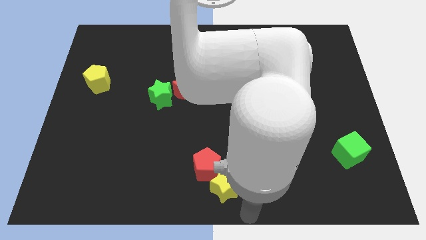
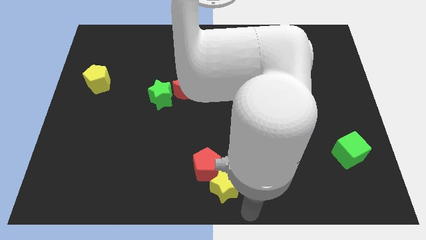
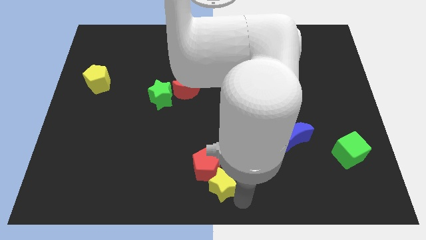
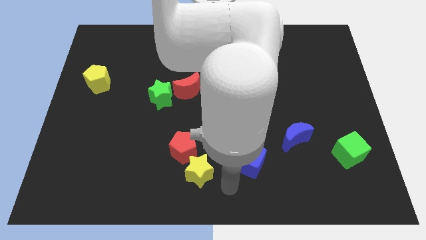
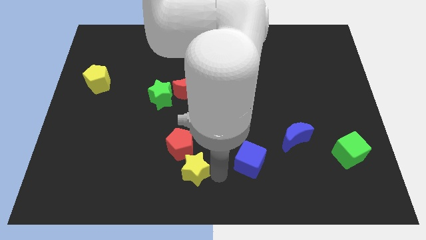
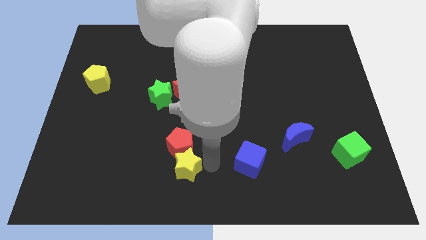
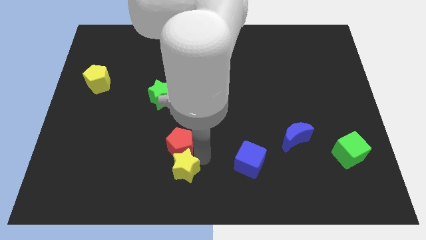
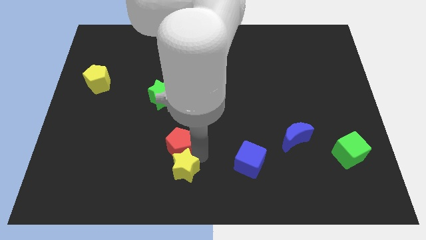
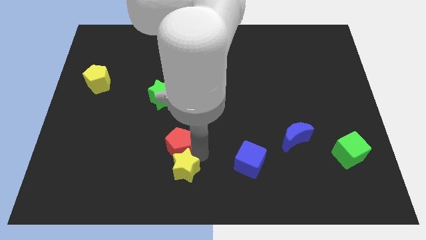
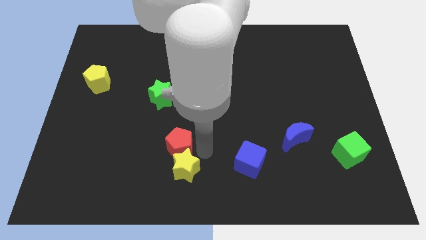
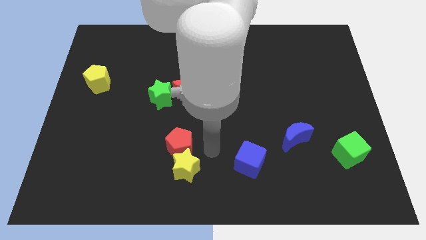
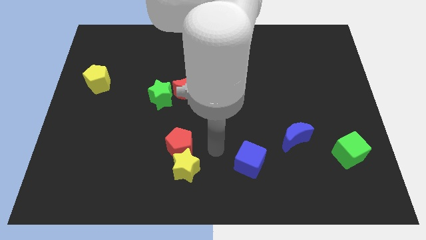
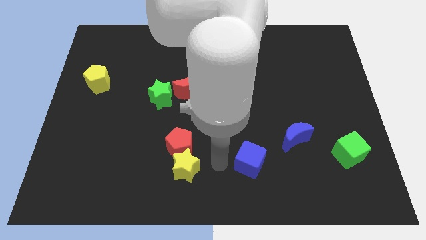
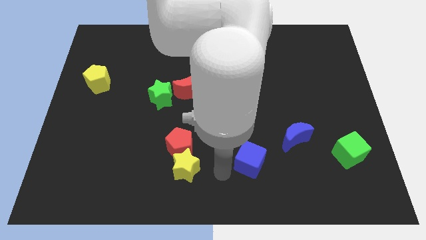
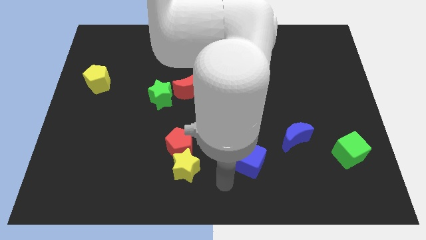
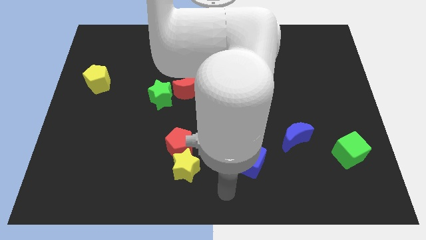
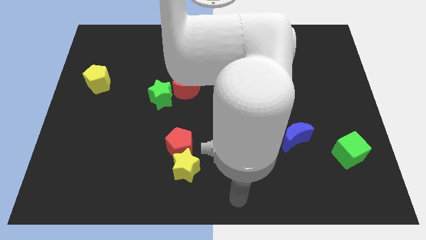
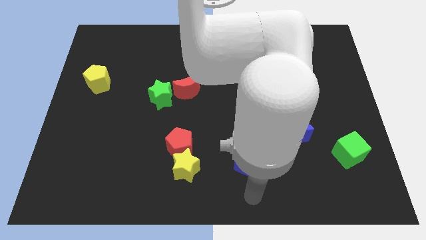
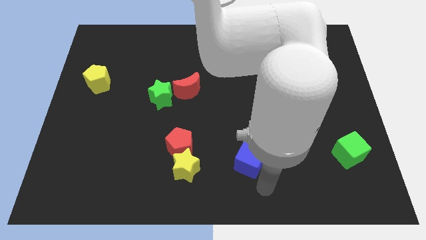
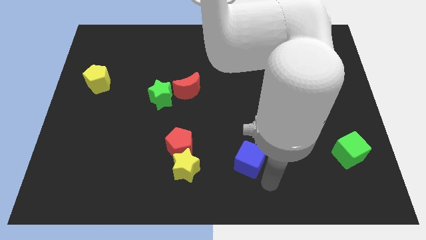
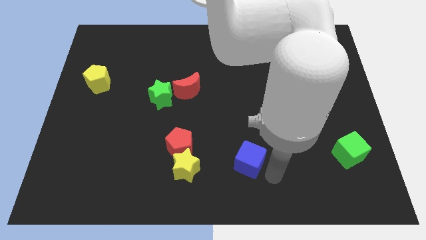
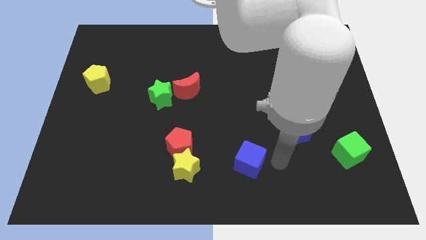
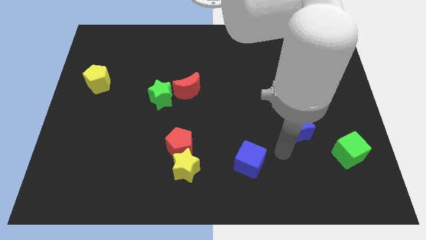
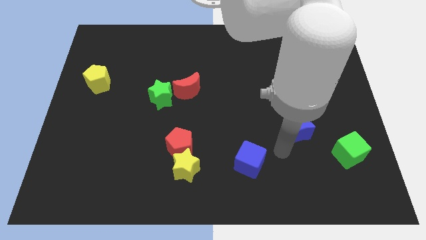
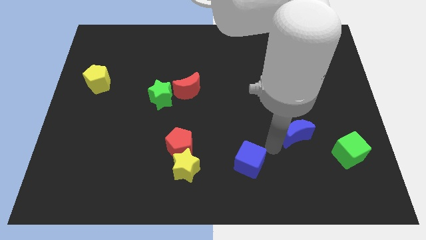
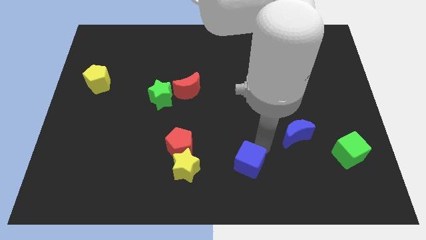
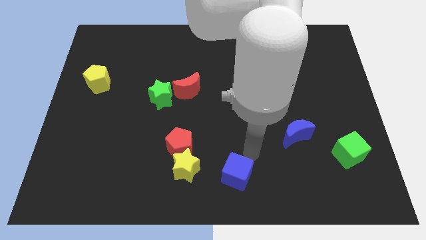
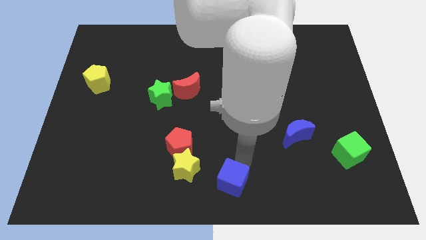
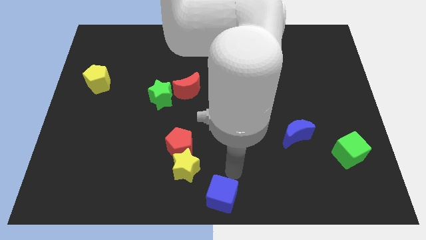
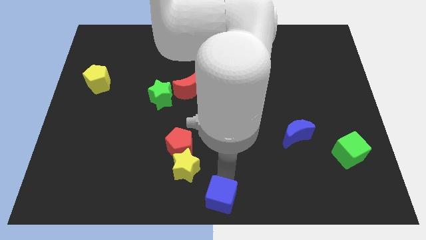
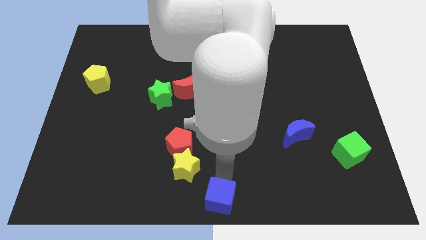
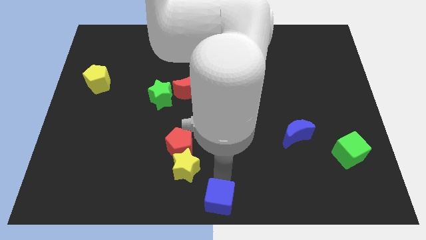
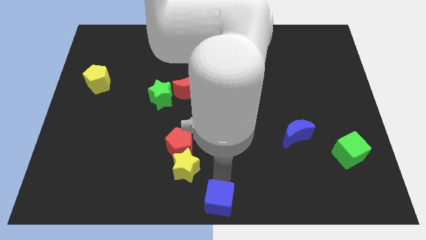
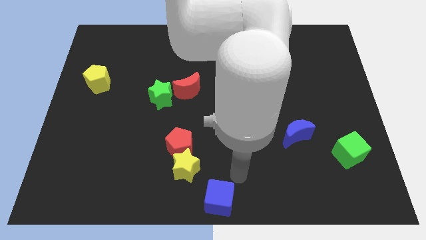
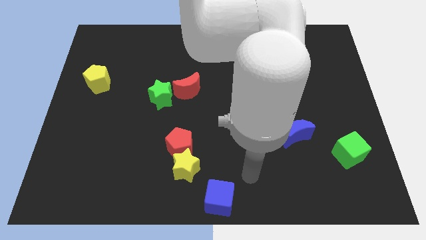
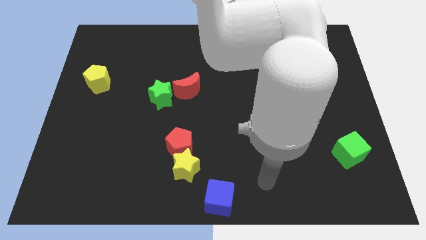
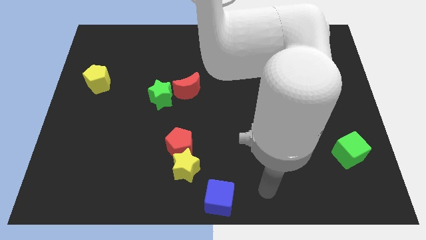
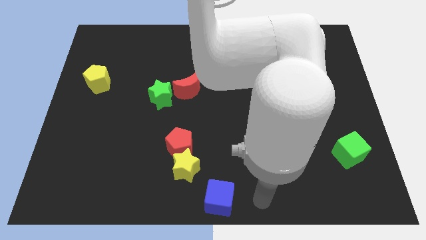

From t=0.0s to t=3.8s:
move blue cube to the bottom center

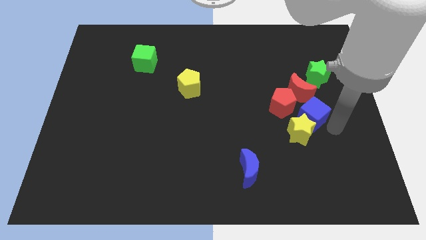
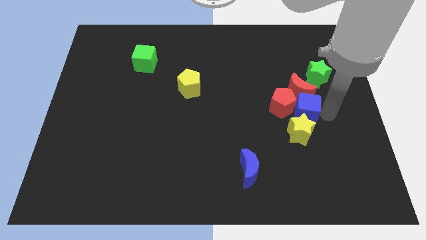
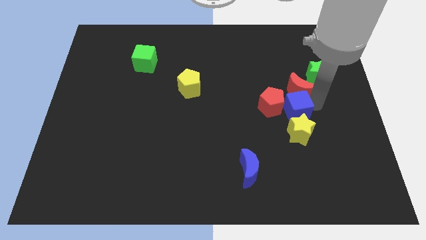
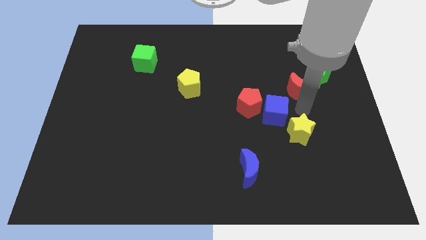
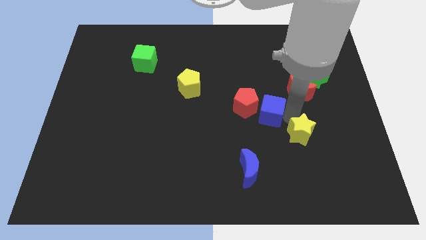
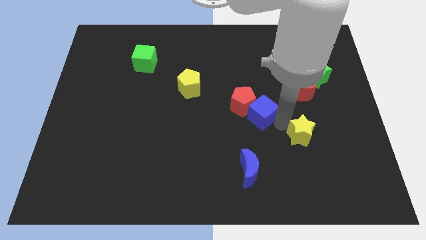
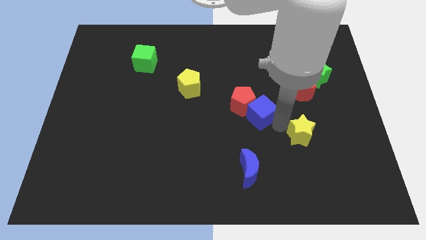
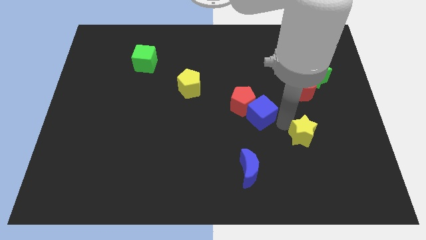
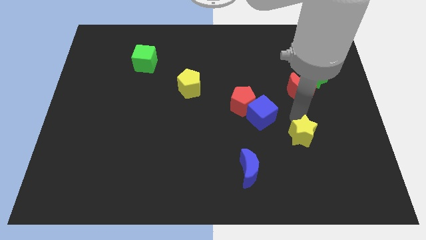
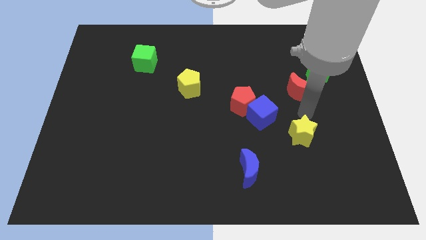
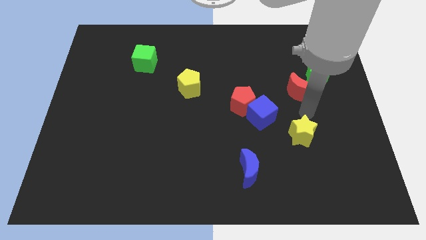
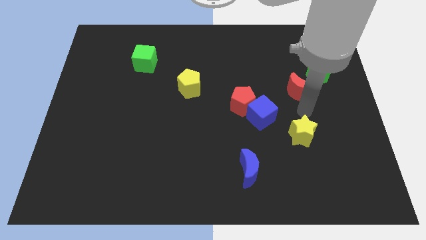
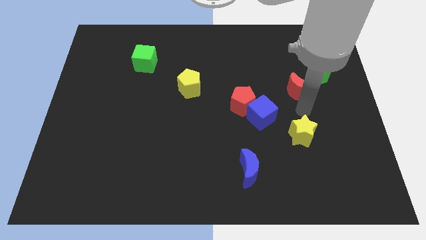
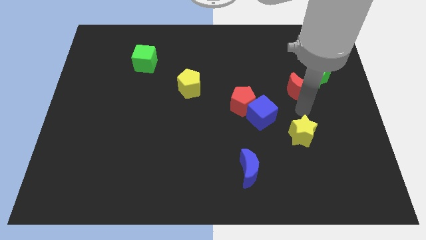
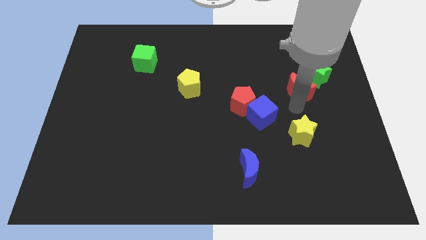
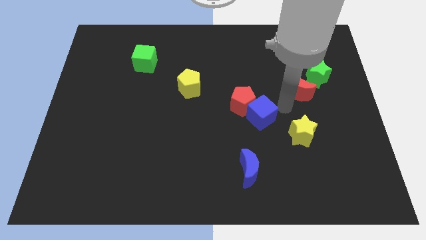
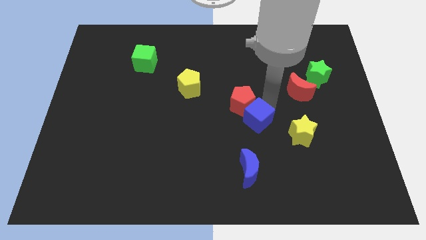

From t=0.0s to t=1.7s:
drag the blue cube slightly to the left

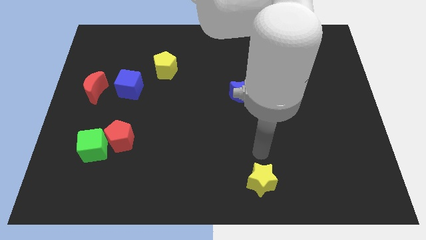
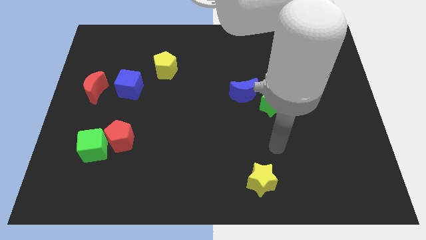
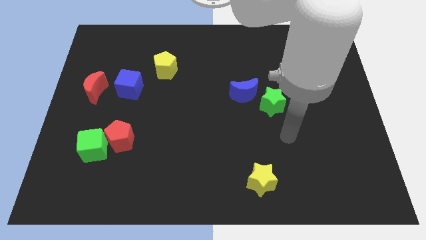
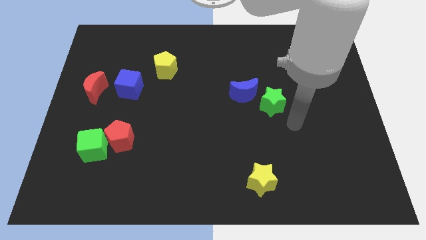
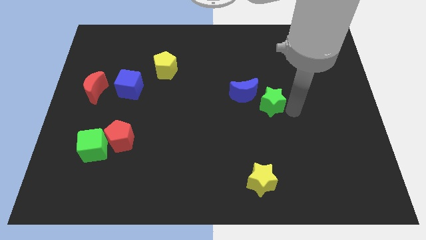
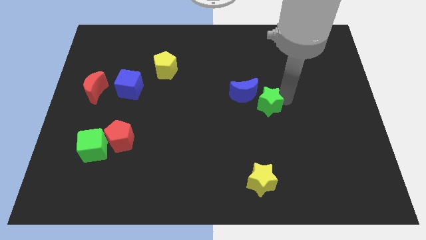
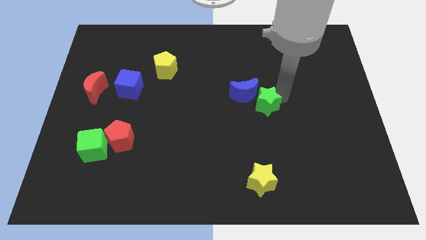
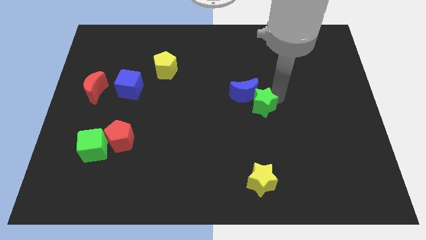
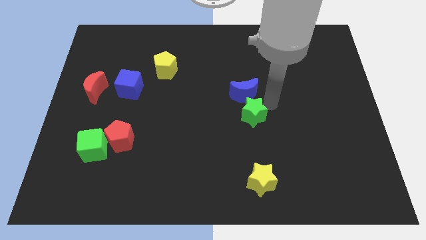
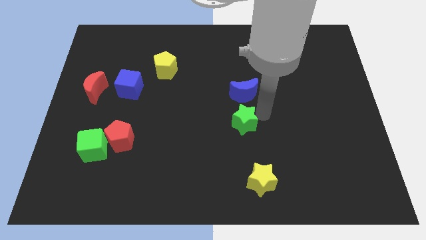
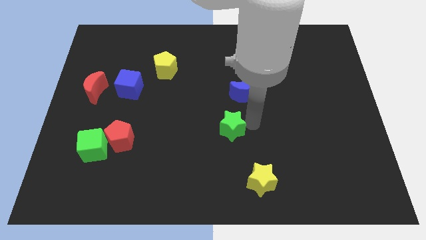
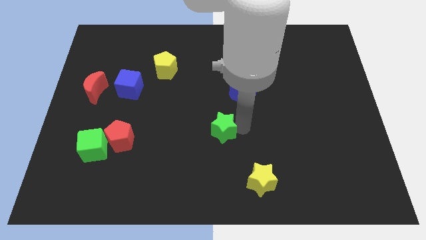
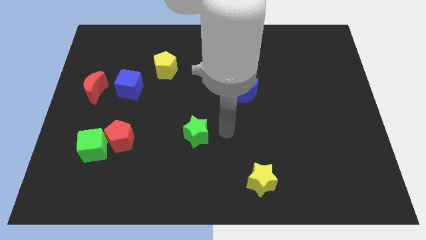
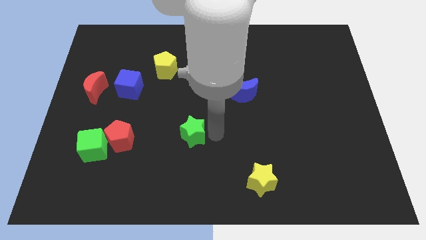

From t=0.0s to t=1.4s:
place the green star to the right of red pentagon

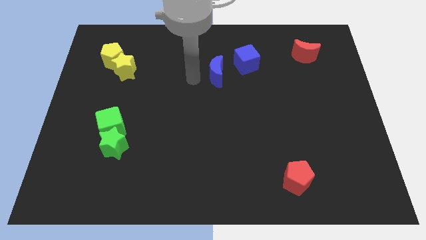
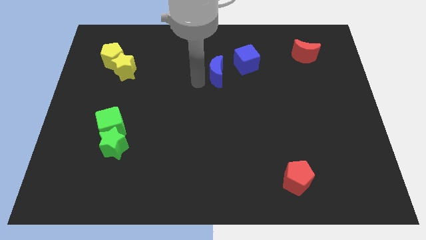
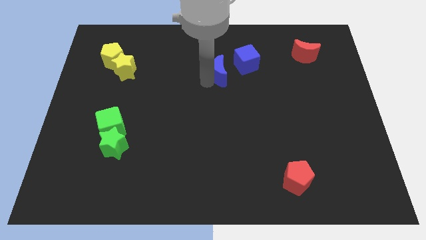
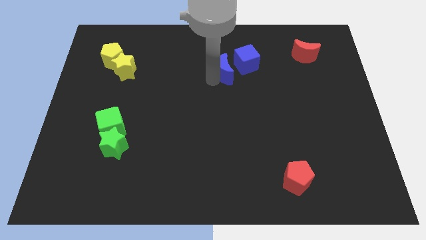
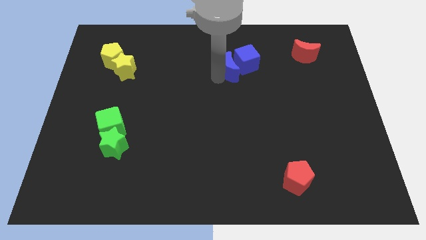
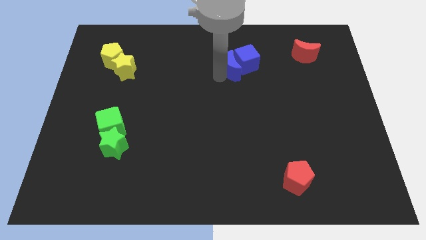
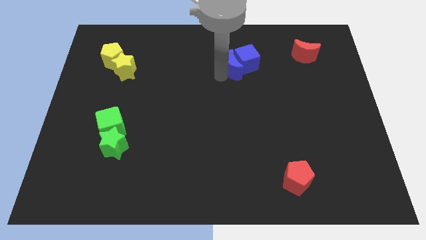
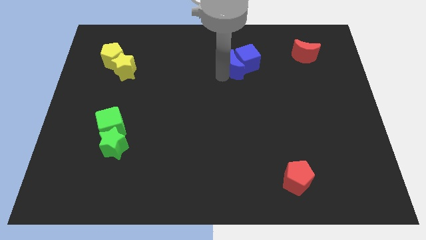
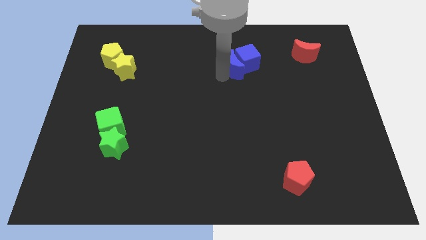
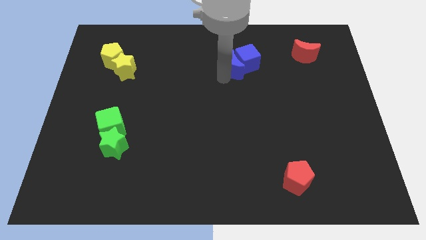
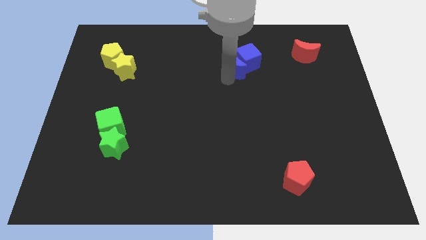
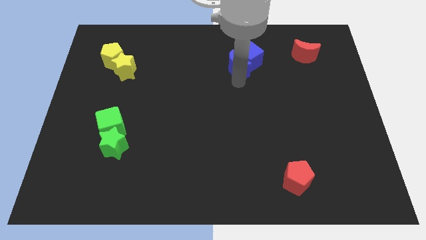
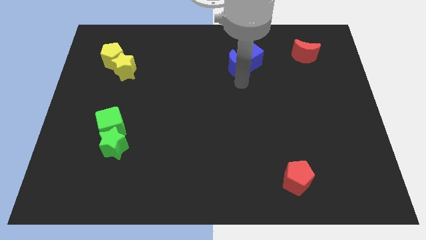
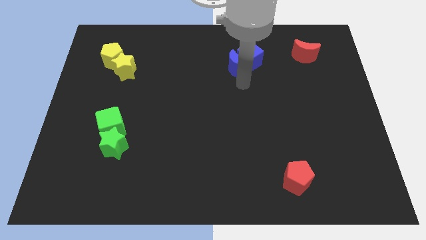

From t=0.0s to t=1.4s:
push blue moon into the blue cube

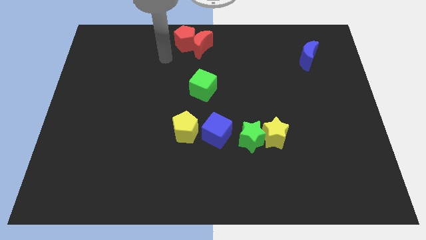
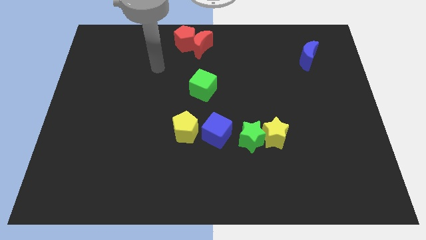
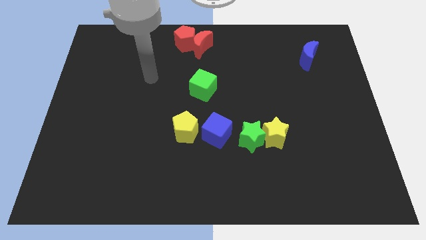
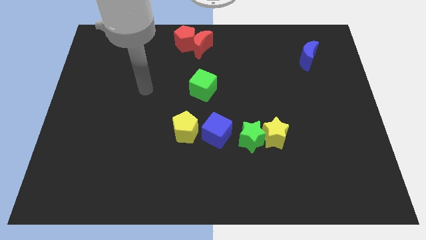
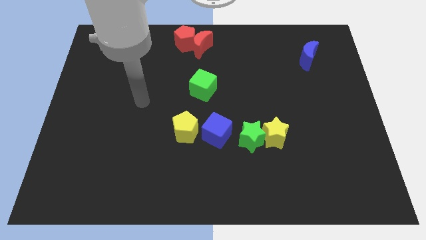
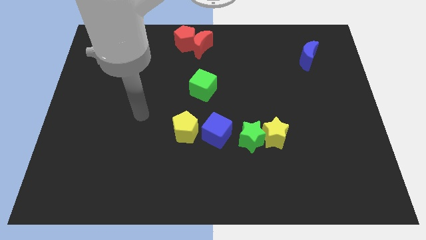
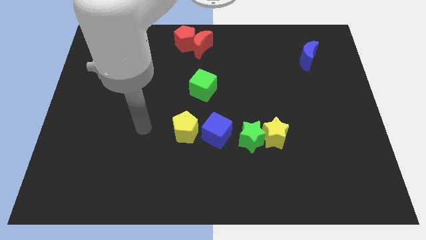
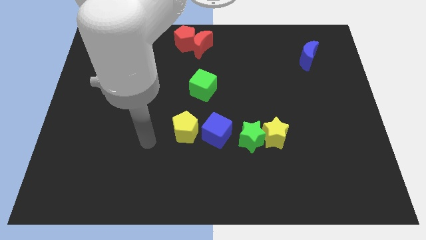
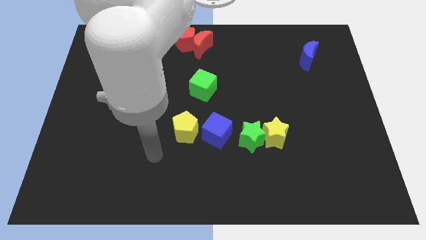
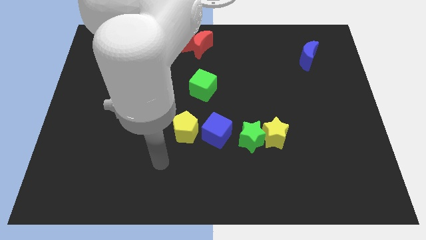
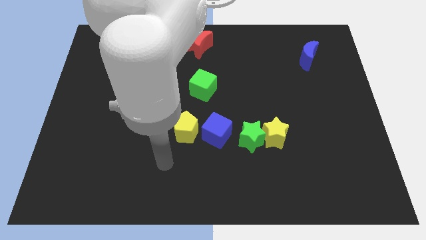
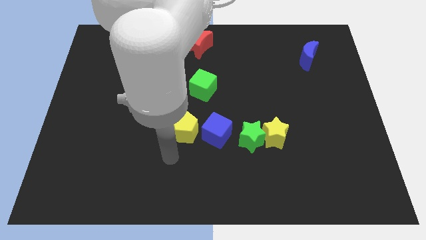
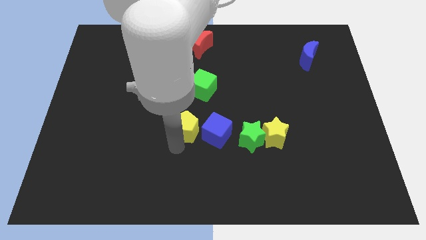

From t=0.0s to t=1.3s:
point the arm at the bottom of the yellow pentagon
